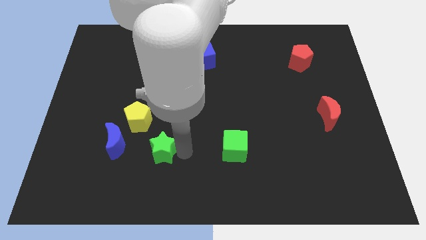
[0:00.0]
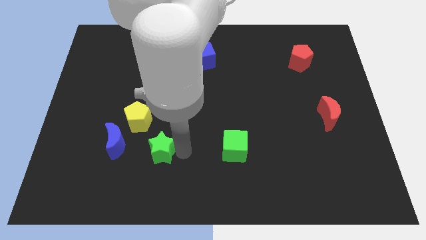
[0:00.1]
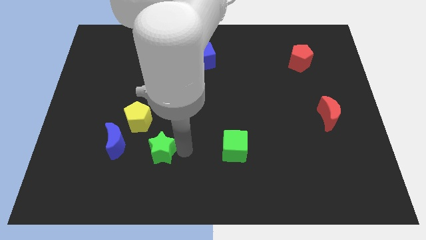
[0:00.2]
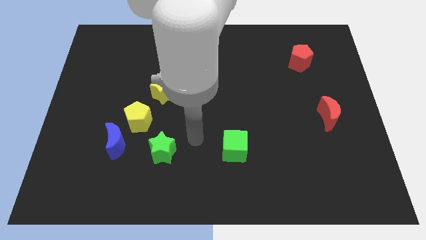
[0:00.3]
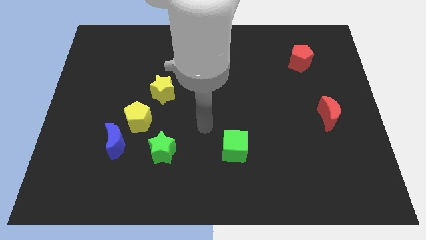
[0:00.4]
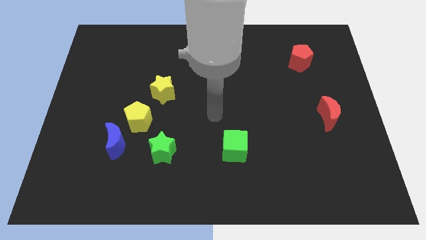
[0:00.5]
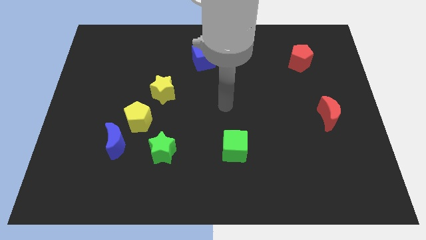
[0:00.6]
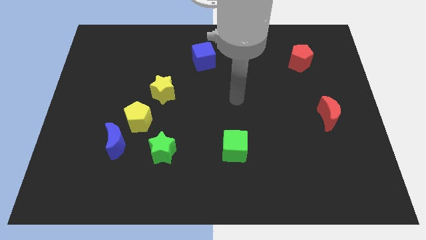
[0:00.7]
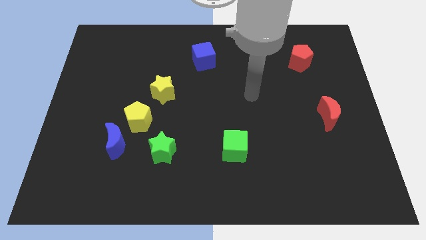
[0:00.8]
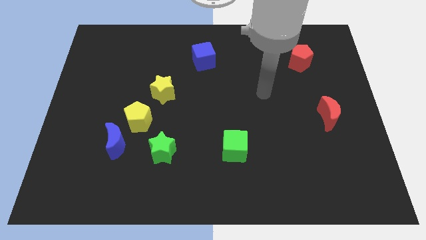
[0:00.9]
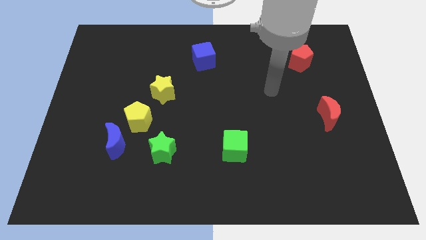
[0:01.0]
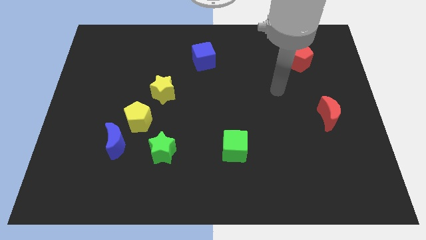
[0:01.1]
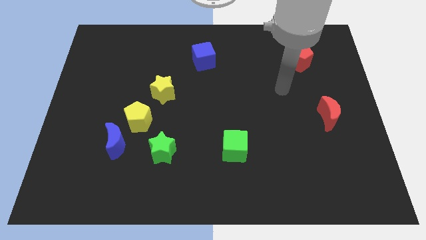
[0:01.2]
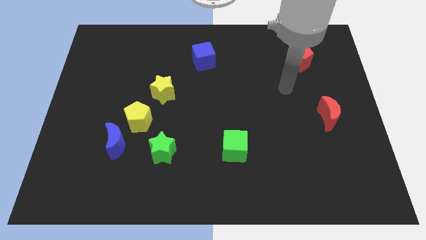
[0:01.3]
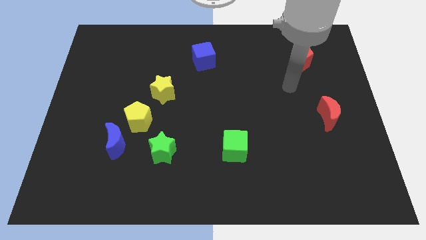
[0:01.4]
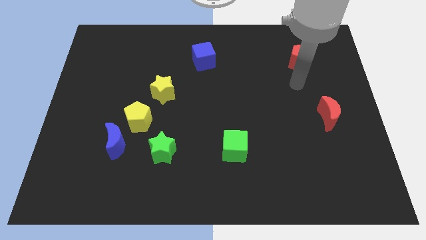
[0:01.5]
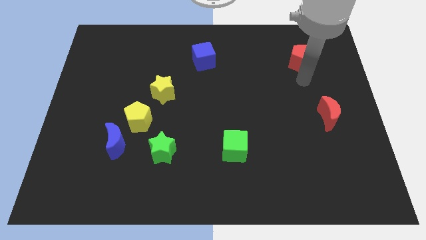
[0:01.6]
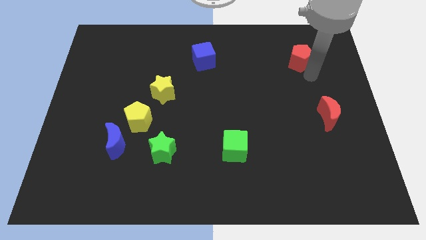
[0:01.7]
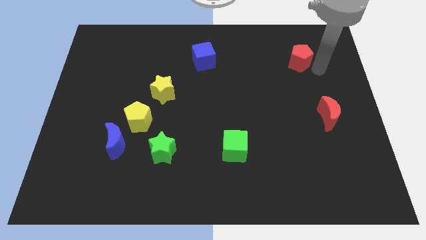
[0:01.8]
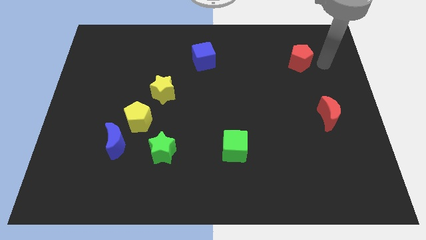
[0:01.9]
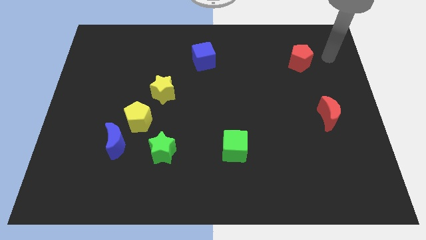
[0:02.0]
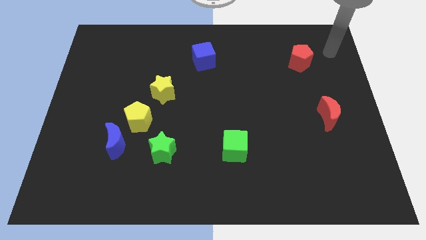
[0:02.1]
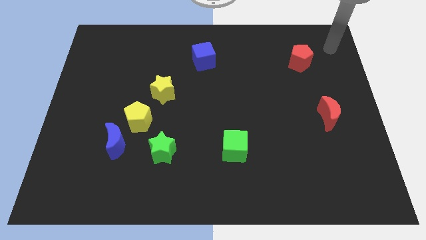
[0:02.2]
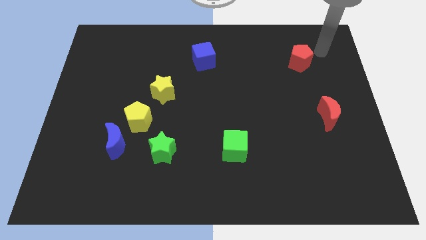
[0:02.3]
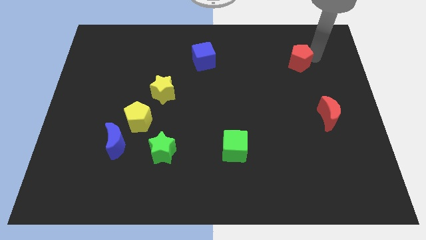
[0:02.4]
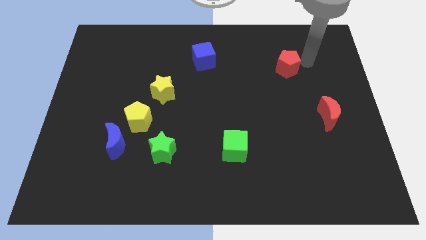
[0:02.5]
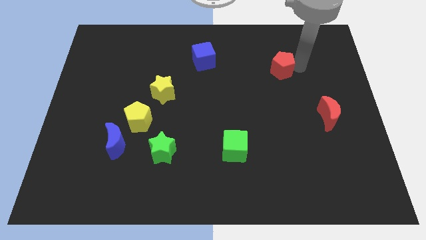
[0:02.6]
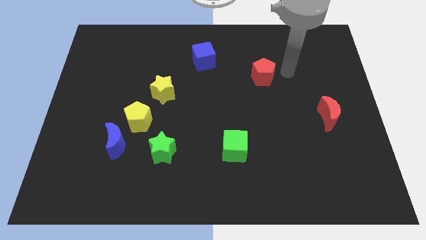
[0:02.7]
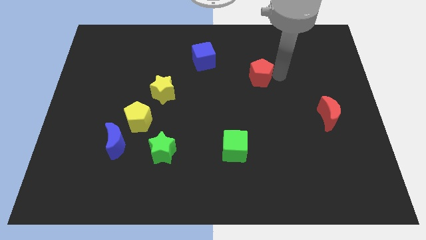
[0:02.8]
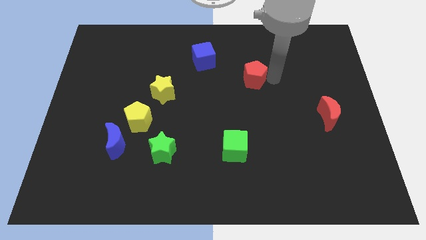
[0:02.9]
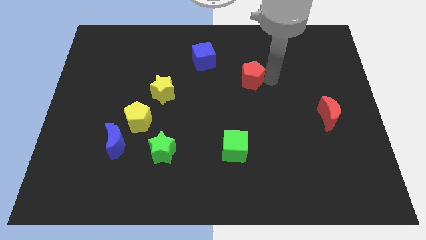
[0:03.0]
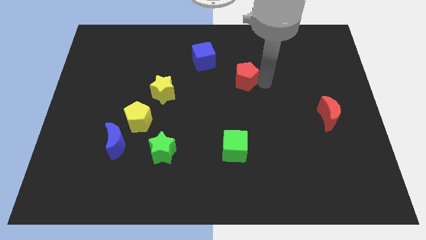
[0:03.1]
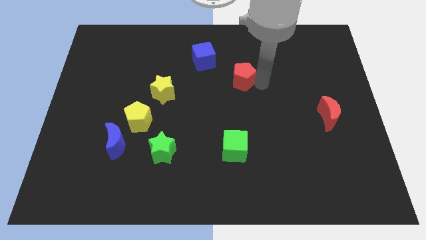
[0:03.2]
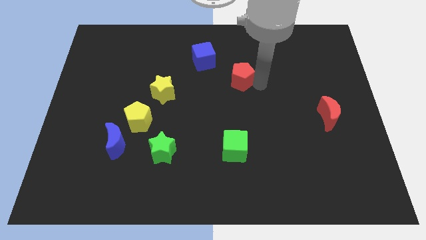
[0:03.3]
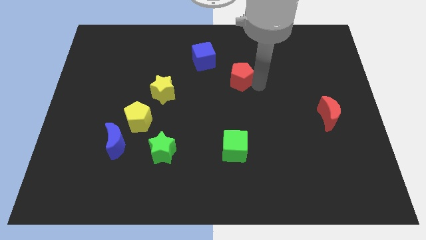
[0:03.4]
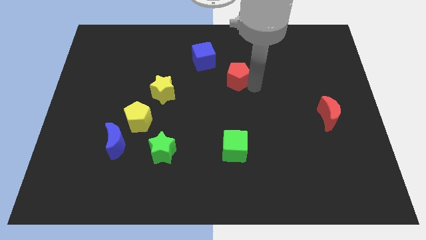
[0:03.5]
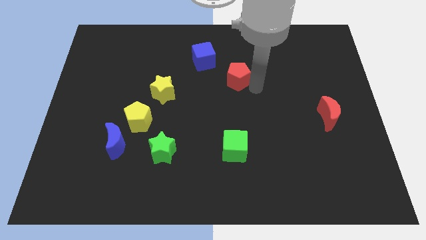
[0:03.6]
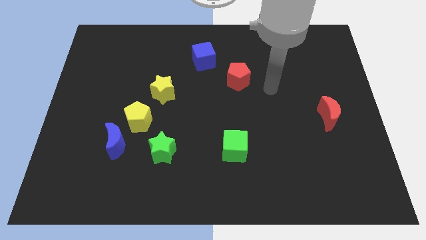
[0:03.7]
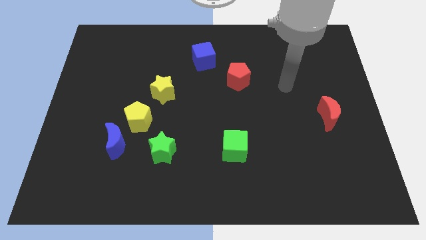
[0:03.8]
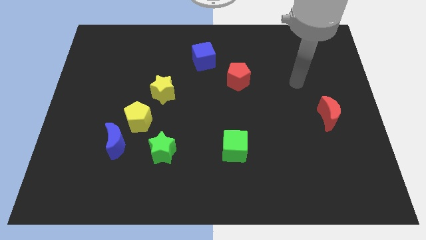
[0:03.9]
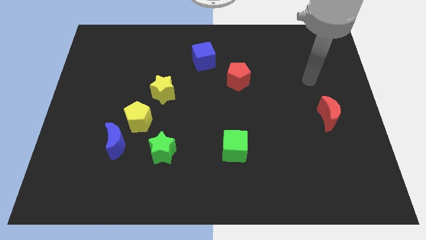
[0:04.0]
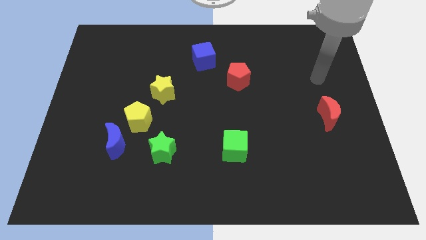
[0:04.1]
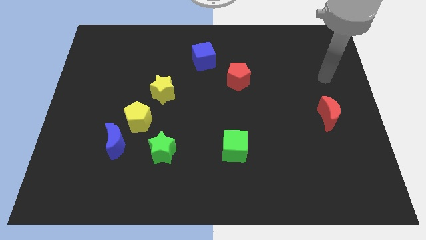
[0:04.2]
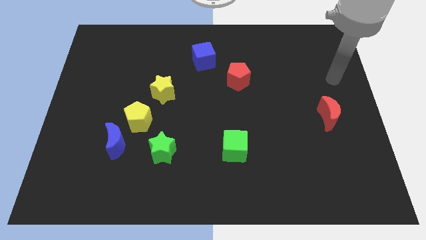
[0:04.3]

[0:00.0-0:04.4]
put the red pentagon to the right of the yellow star

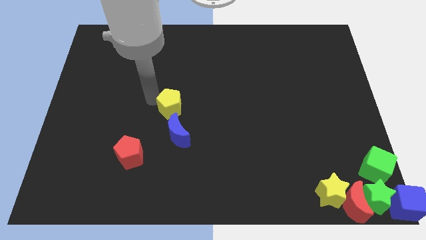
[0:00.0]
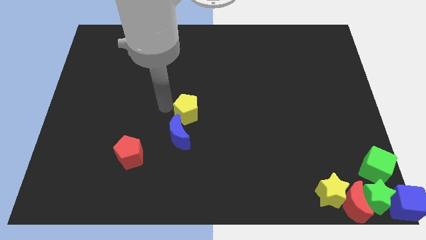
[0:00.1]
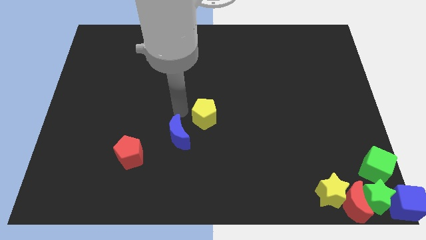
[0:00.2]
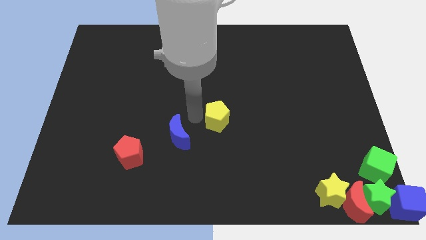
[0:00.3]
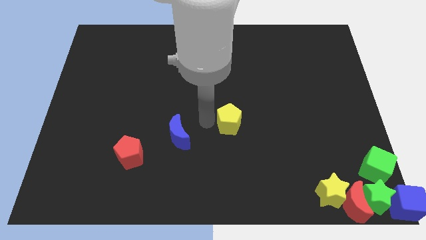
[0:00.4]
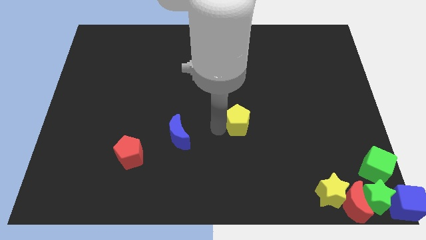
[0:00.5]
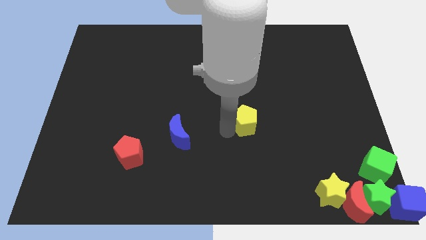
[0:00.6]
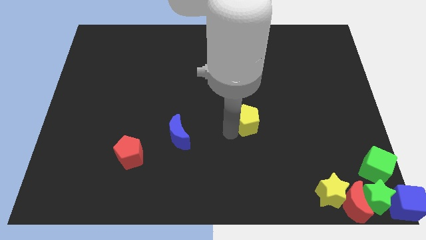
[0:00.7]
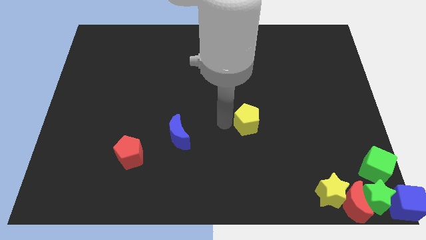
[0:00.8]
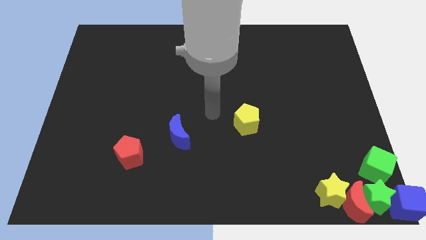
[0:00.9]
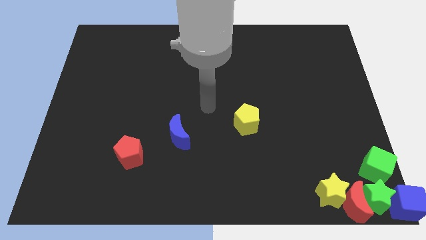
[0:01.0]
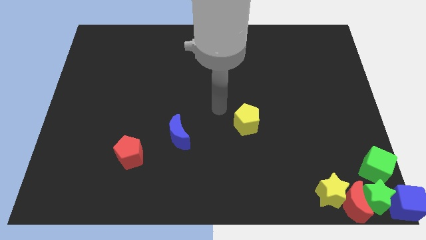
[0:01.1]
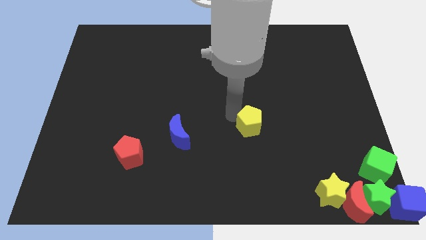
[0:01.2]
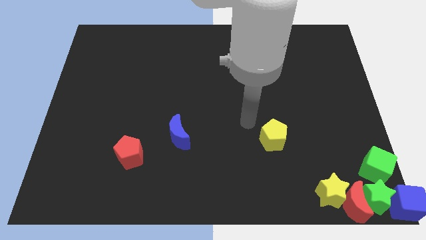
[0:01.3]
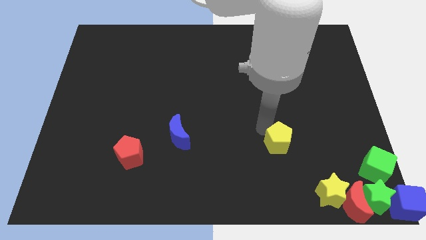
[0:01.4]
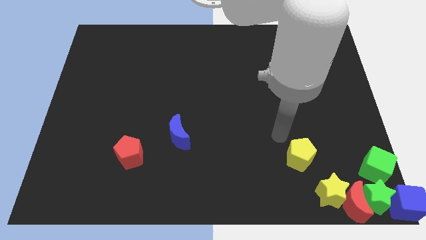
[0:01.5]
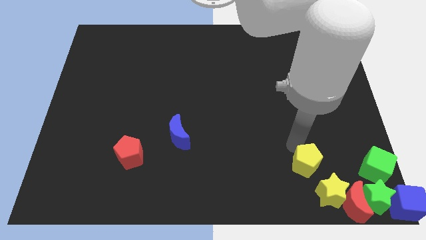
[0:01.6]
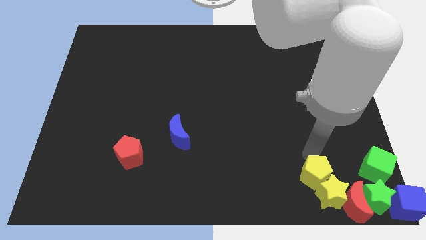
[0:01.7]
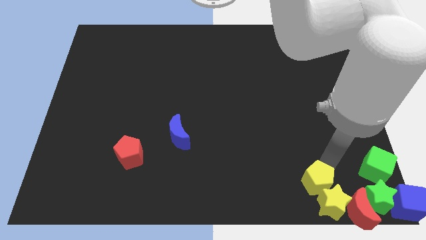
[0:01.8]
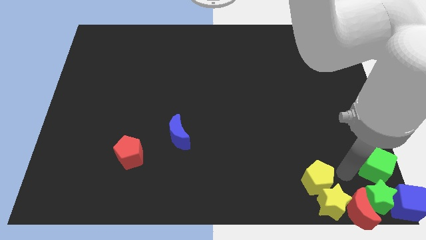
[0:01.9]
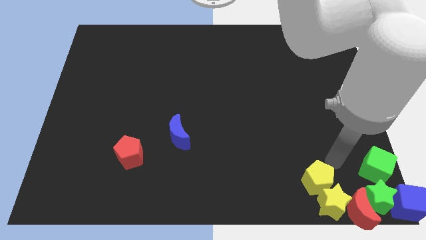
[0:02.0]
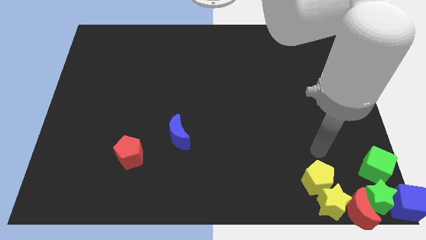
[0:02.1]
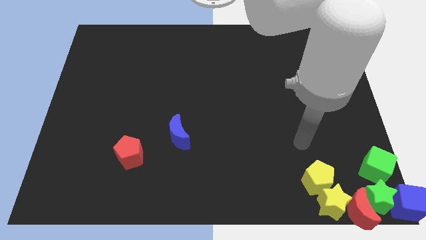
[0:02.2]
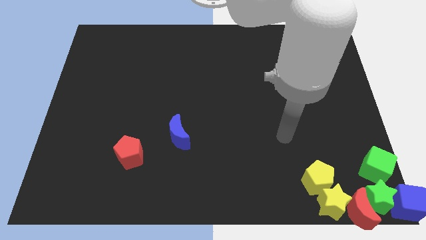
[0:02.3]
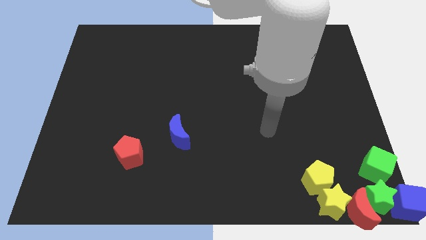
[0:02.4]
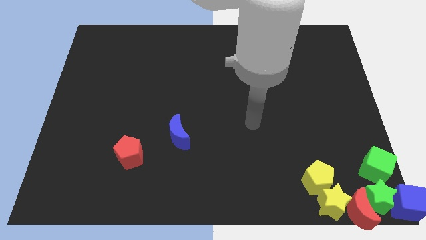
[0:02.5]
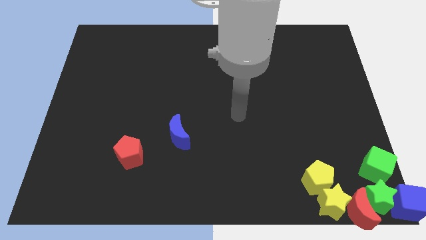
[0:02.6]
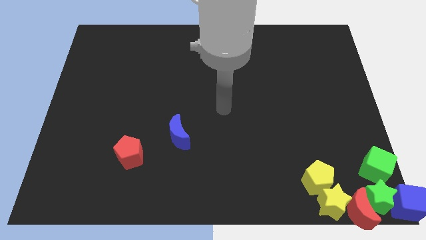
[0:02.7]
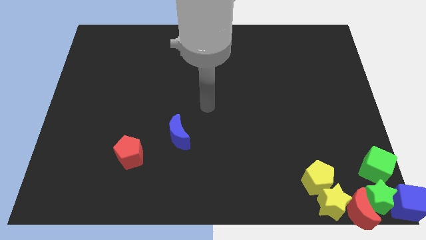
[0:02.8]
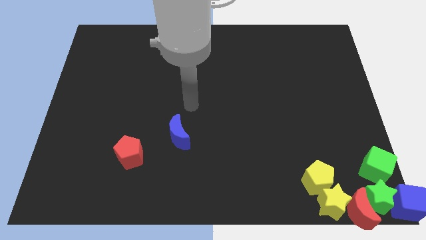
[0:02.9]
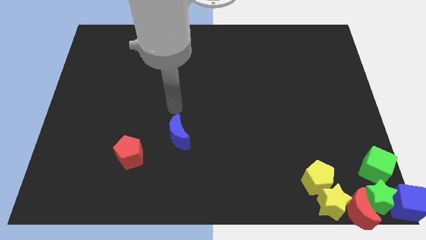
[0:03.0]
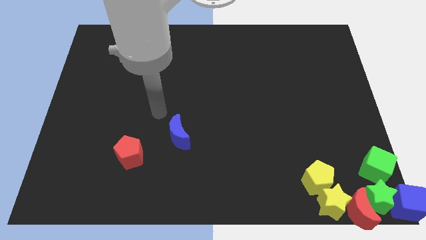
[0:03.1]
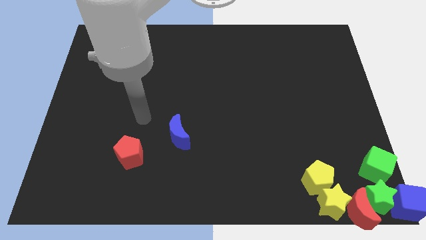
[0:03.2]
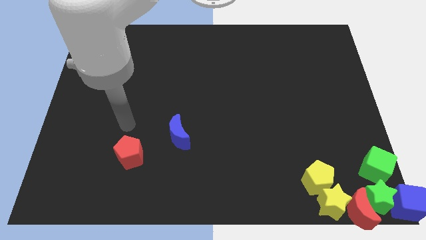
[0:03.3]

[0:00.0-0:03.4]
slide the yellow pentagon to the top left side of the yellow star

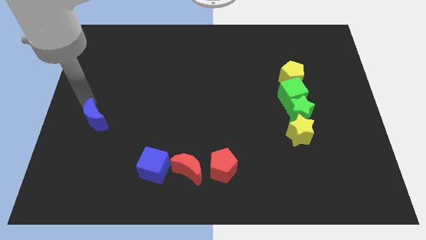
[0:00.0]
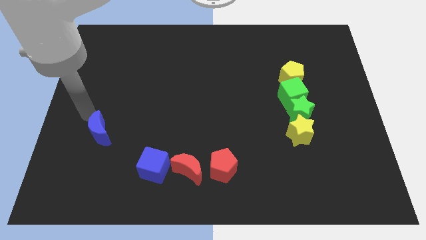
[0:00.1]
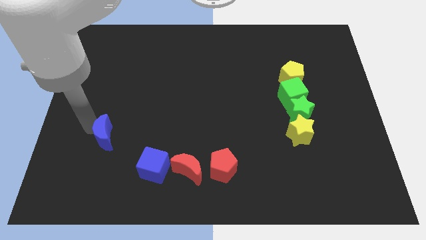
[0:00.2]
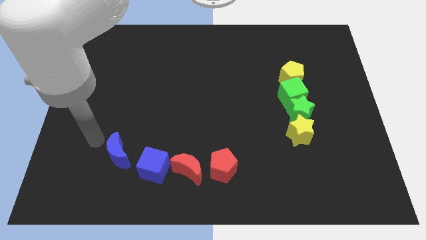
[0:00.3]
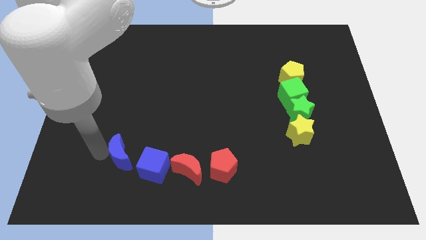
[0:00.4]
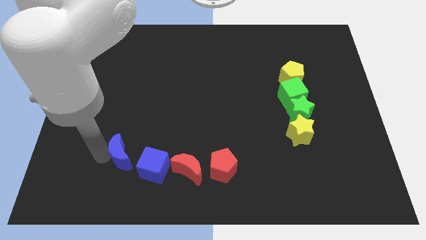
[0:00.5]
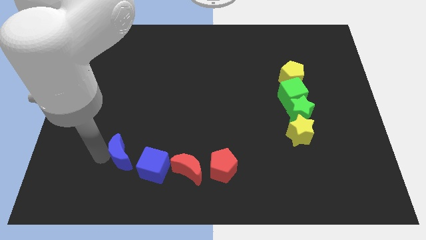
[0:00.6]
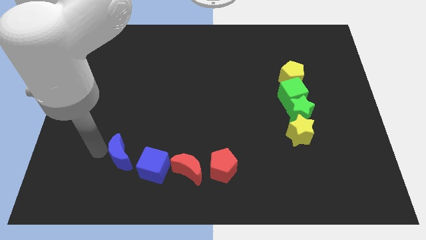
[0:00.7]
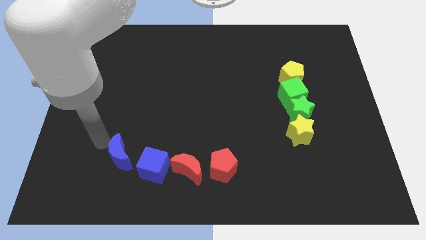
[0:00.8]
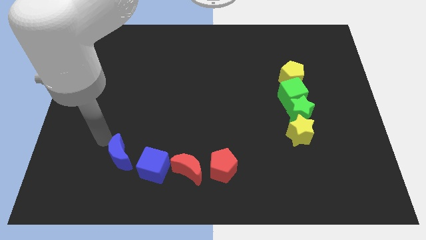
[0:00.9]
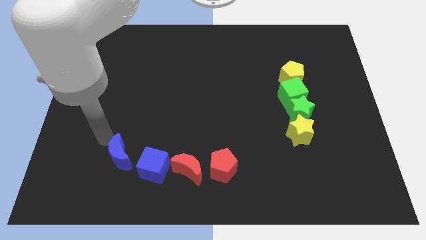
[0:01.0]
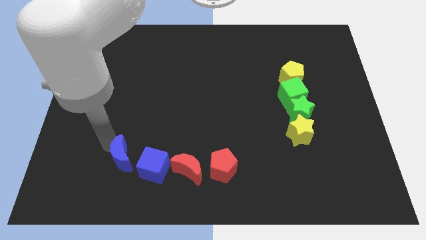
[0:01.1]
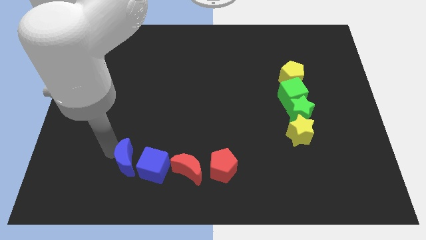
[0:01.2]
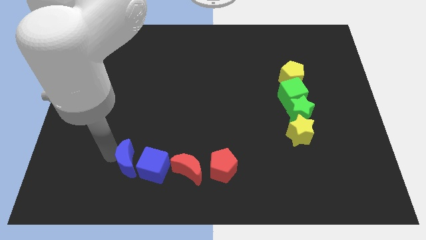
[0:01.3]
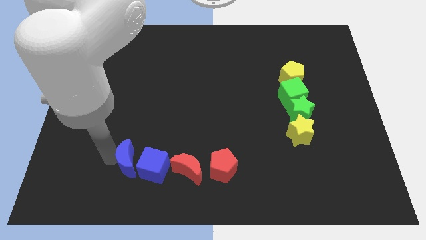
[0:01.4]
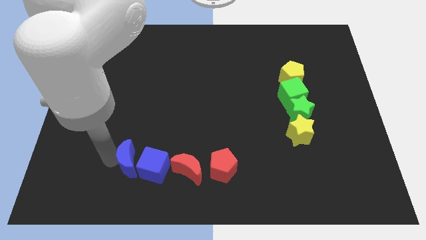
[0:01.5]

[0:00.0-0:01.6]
move the blue crescent close to the left side of the blue cube
